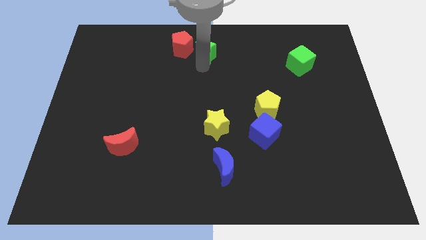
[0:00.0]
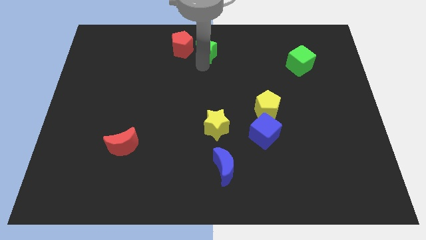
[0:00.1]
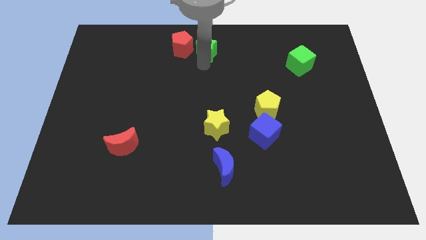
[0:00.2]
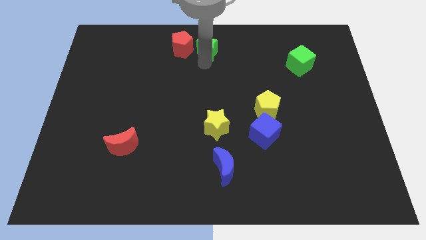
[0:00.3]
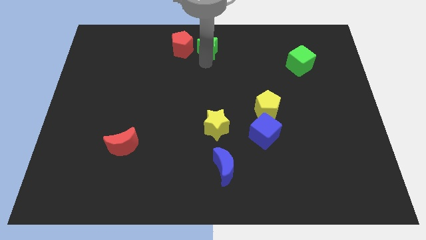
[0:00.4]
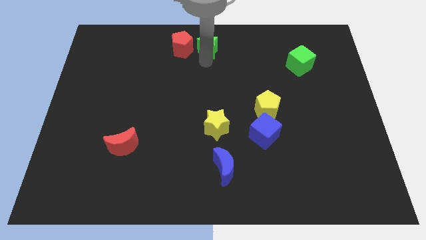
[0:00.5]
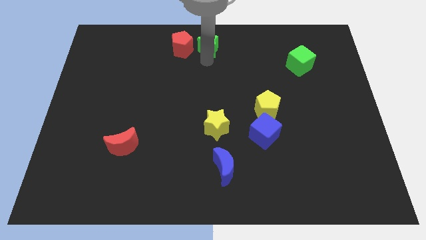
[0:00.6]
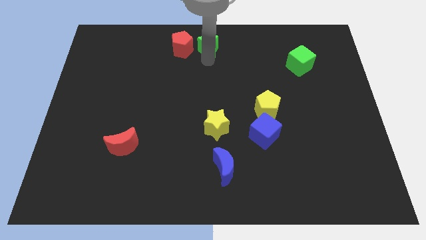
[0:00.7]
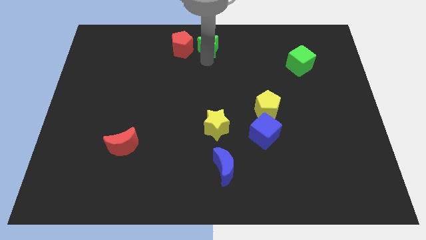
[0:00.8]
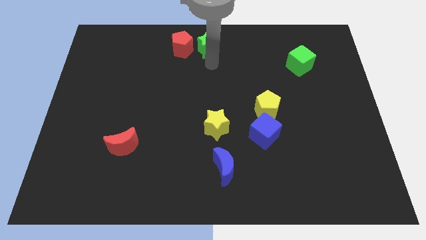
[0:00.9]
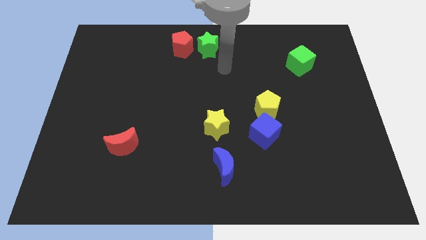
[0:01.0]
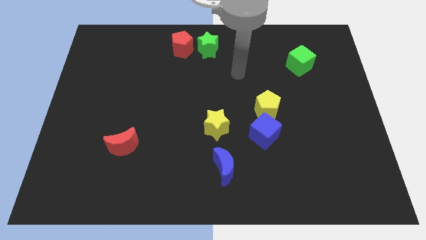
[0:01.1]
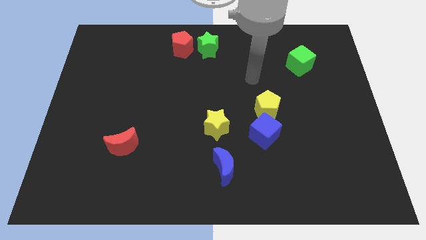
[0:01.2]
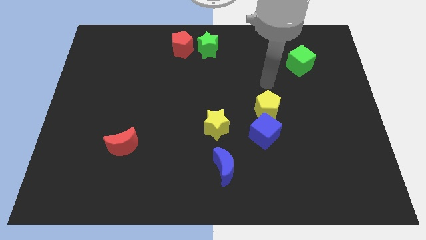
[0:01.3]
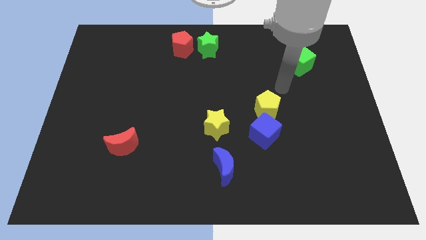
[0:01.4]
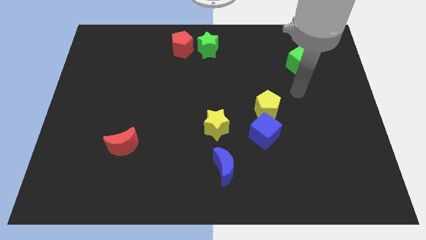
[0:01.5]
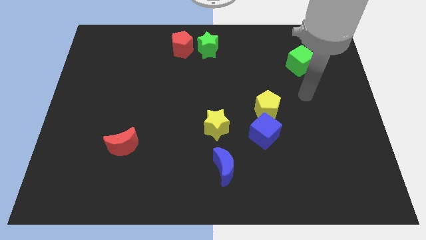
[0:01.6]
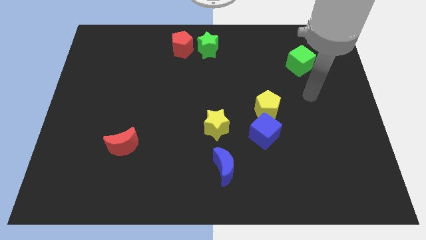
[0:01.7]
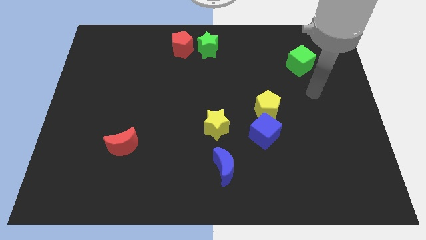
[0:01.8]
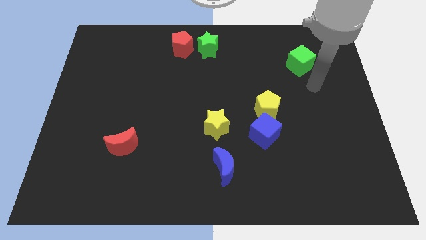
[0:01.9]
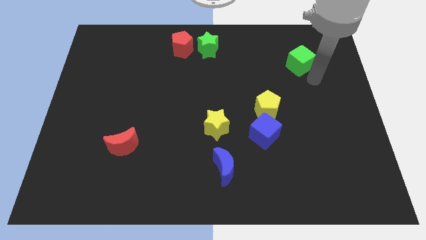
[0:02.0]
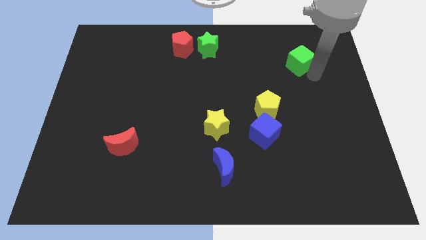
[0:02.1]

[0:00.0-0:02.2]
place your arm below the green cube

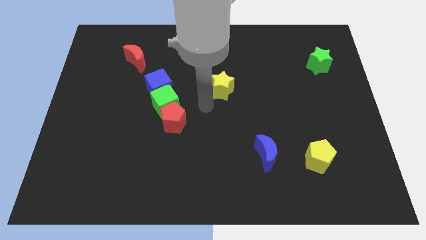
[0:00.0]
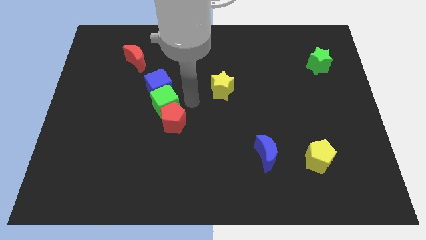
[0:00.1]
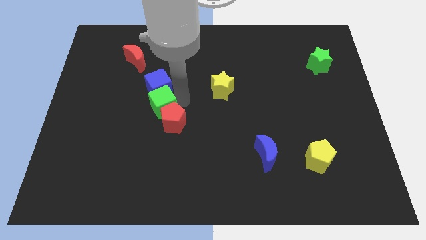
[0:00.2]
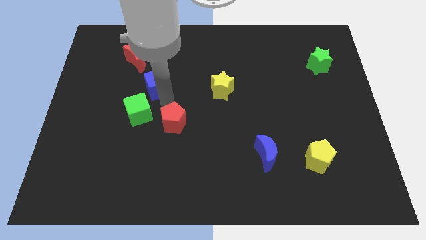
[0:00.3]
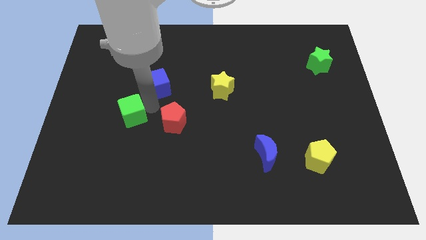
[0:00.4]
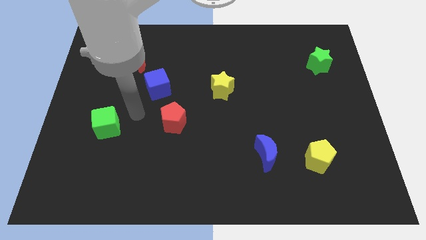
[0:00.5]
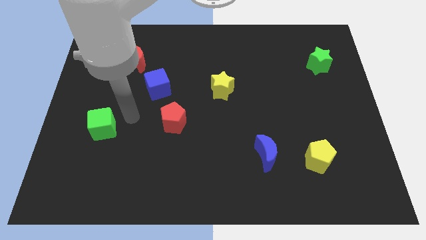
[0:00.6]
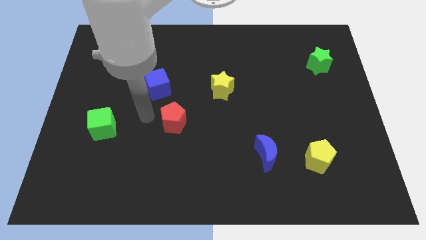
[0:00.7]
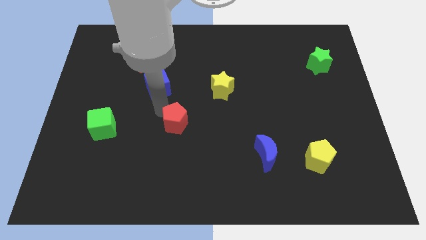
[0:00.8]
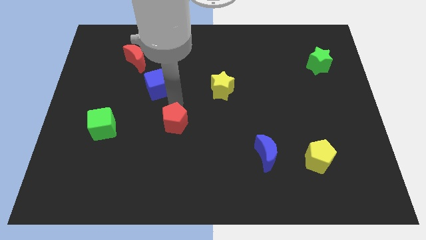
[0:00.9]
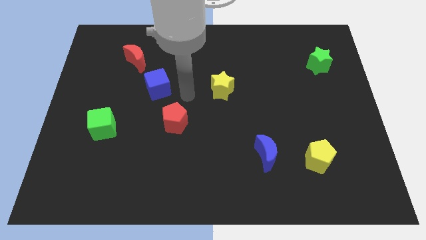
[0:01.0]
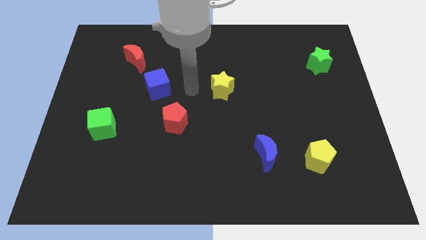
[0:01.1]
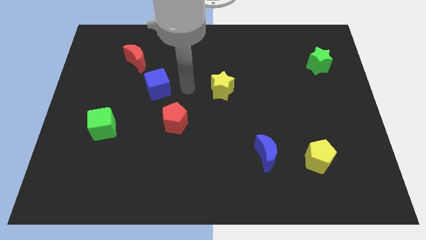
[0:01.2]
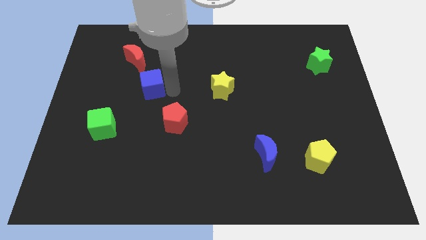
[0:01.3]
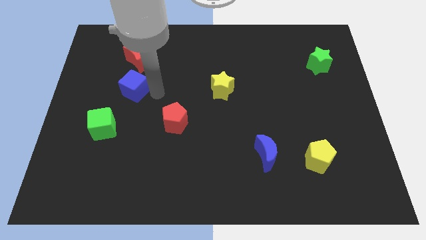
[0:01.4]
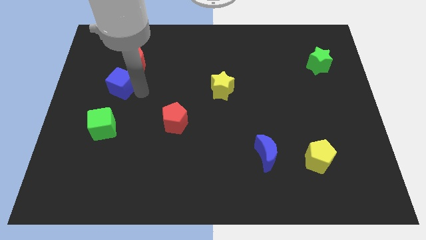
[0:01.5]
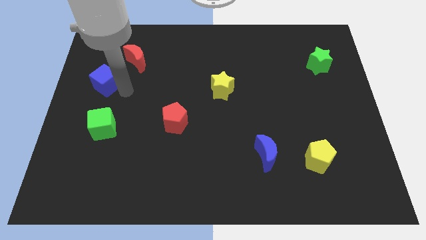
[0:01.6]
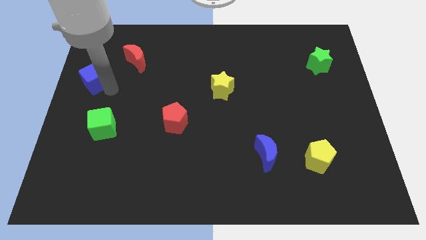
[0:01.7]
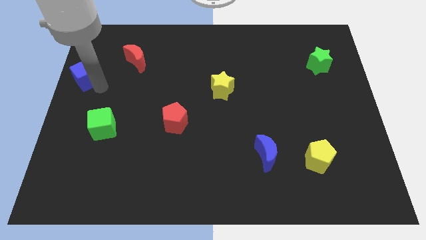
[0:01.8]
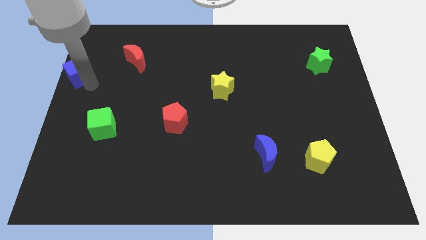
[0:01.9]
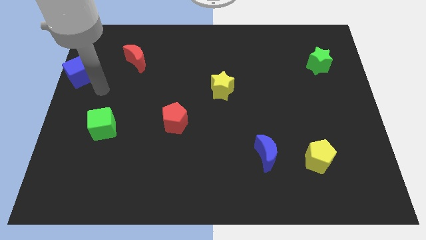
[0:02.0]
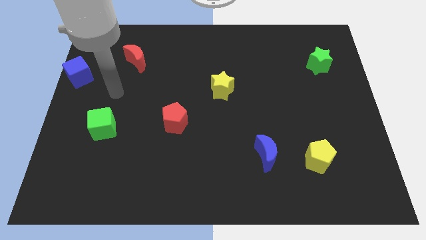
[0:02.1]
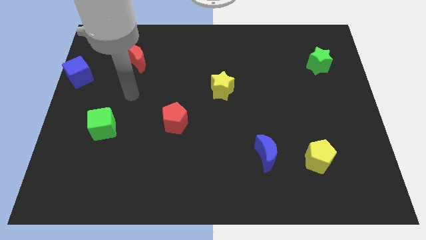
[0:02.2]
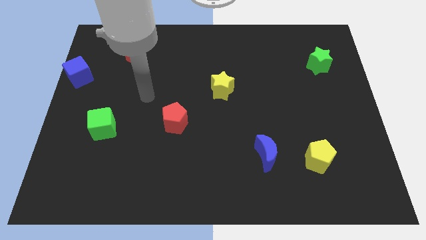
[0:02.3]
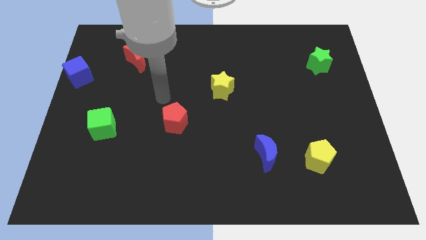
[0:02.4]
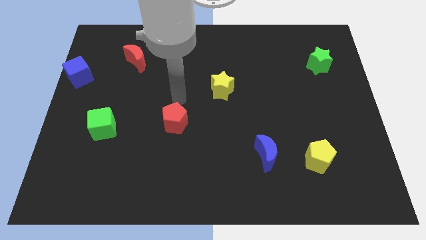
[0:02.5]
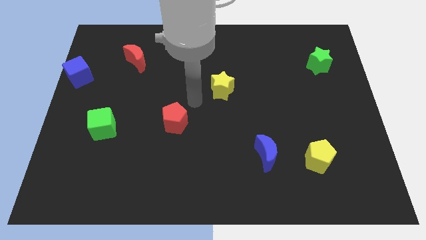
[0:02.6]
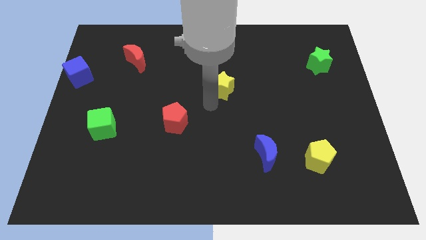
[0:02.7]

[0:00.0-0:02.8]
separate the green cube and the blue cube

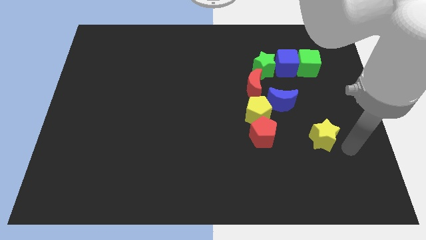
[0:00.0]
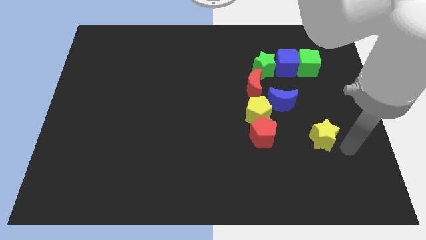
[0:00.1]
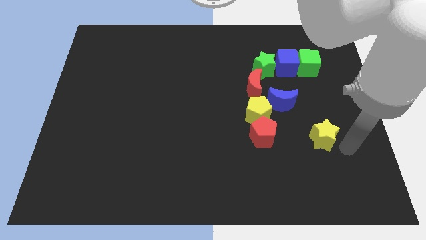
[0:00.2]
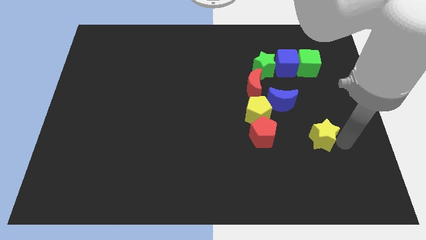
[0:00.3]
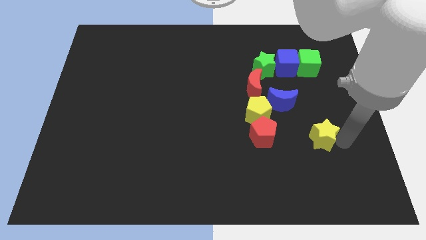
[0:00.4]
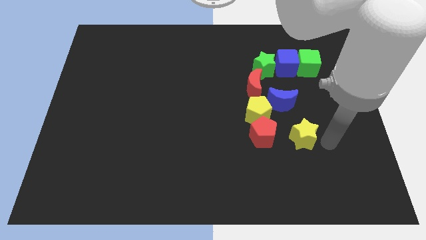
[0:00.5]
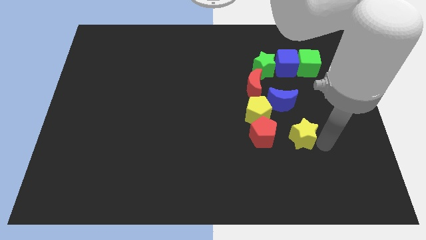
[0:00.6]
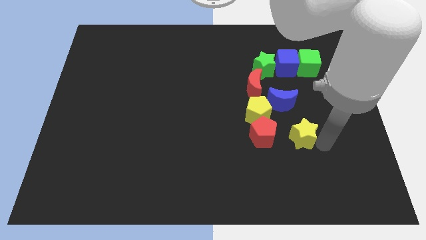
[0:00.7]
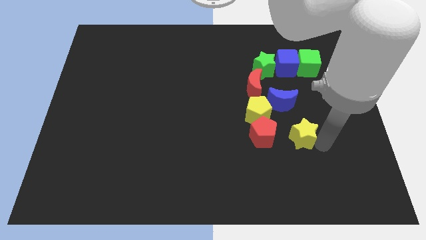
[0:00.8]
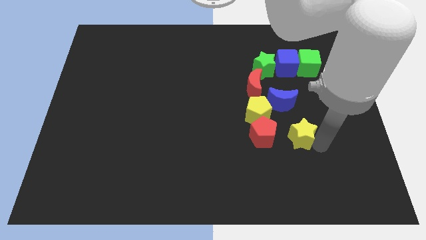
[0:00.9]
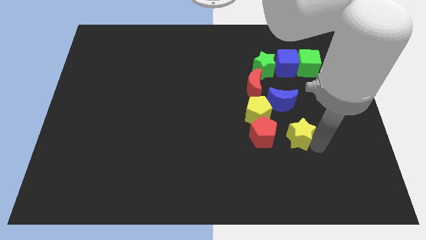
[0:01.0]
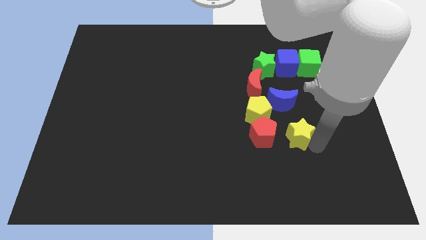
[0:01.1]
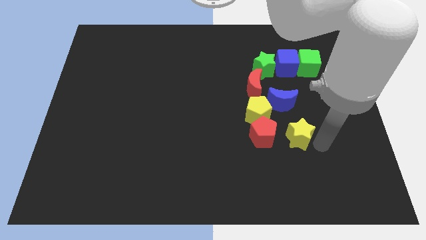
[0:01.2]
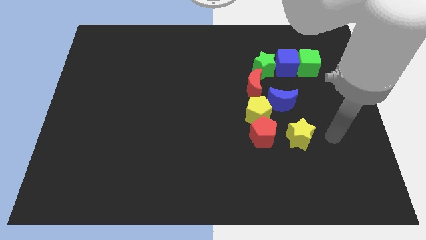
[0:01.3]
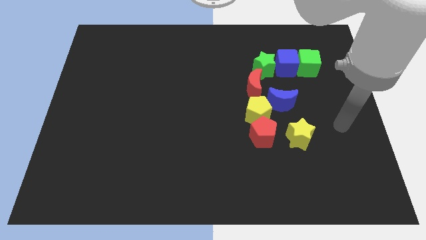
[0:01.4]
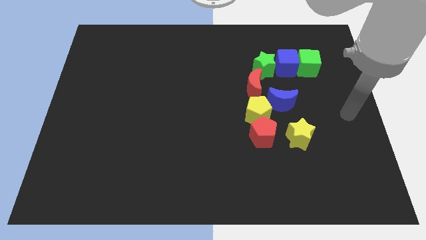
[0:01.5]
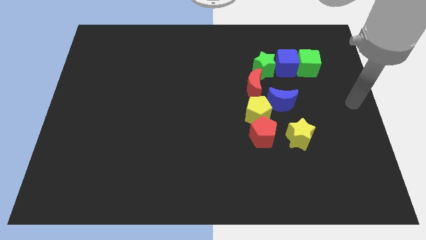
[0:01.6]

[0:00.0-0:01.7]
push the yellow star close to the red pentagon

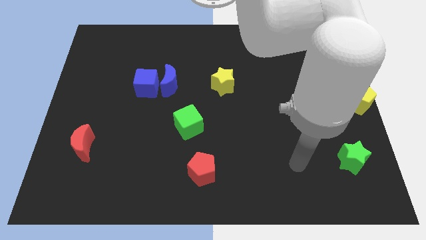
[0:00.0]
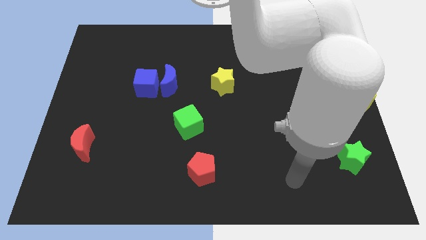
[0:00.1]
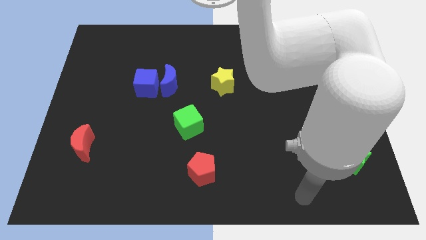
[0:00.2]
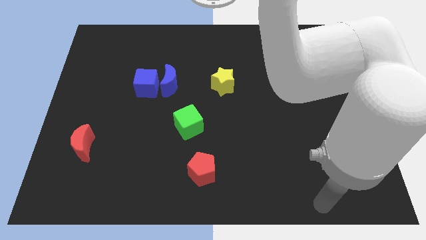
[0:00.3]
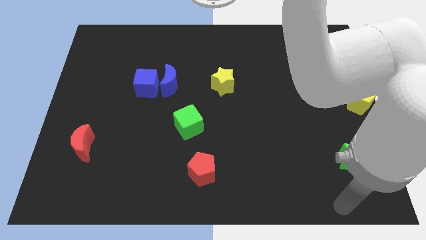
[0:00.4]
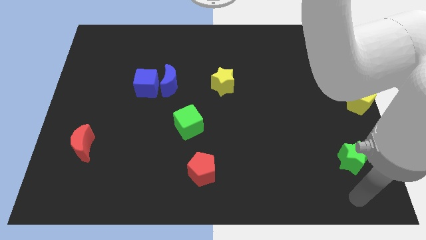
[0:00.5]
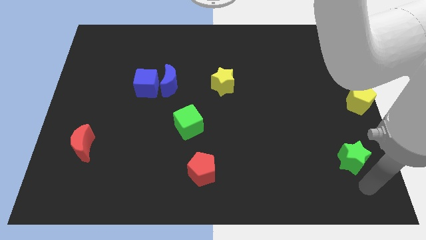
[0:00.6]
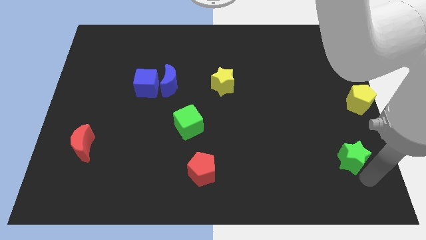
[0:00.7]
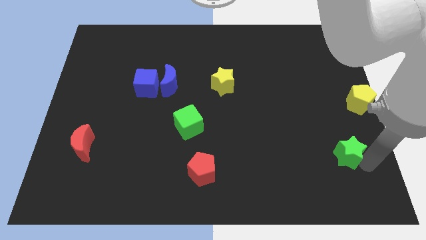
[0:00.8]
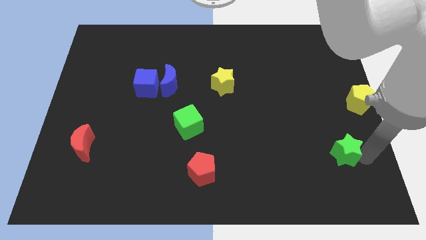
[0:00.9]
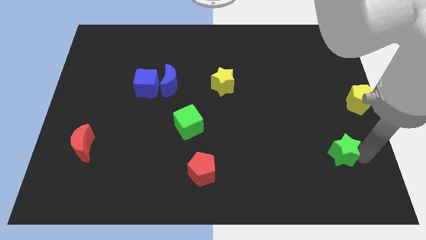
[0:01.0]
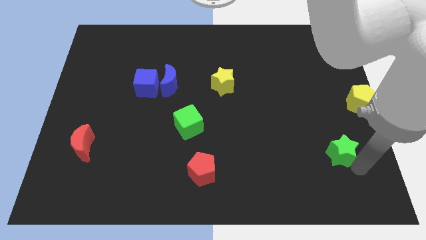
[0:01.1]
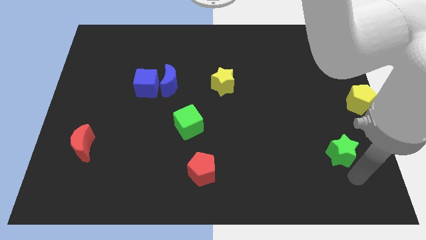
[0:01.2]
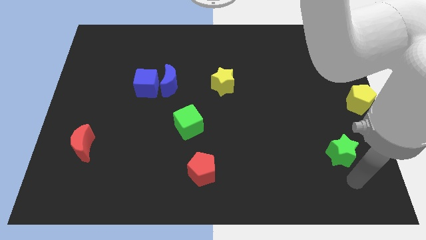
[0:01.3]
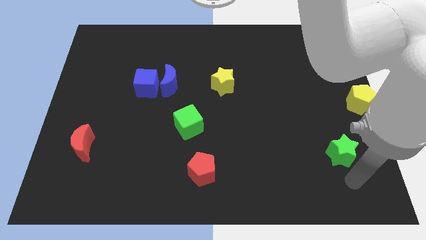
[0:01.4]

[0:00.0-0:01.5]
place your arm below green star

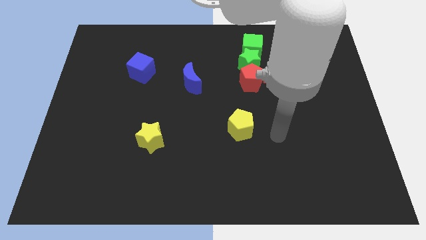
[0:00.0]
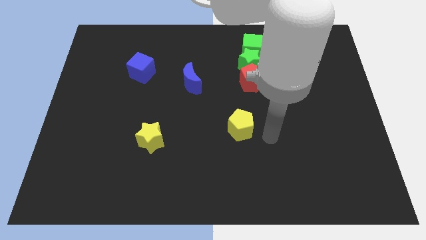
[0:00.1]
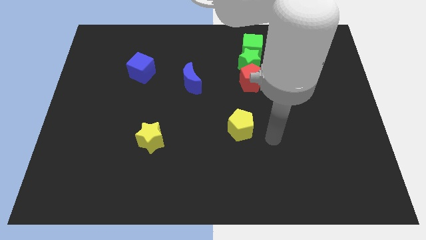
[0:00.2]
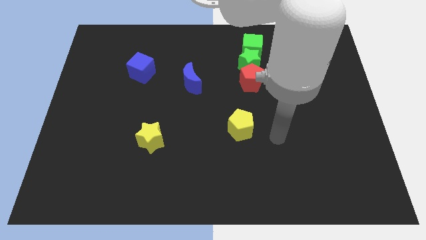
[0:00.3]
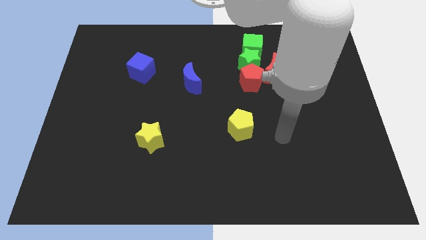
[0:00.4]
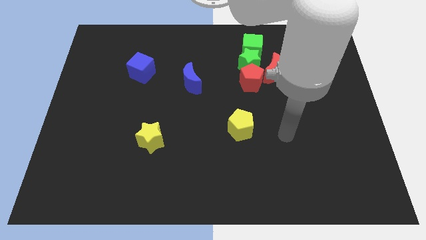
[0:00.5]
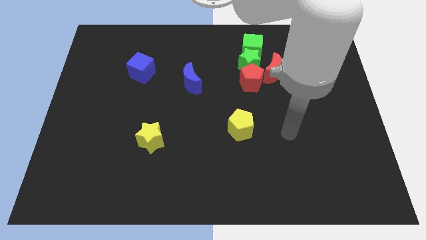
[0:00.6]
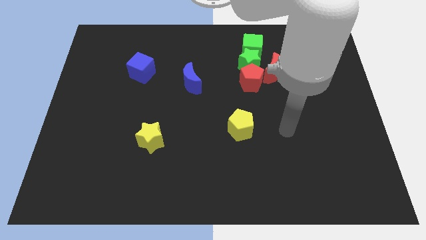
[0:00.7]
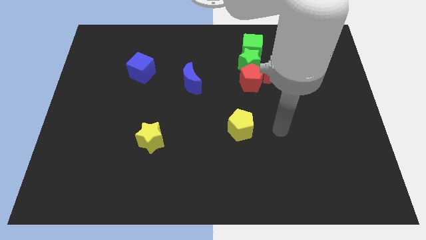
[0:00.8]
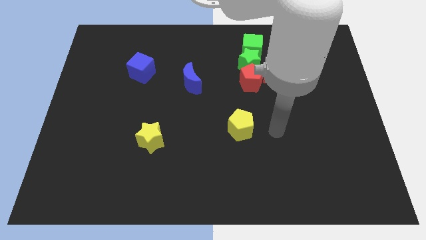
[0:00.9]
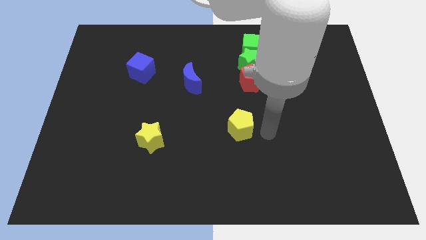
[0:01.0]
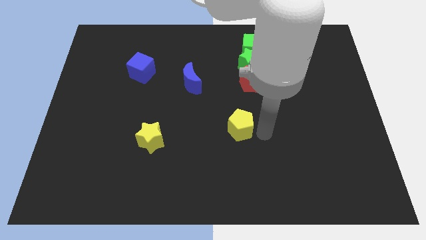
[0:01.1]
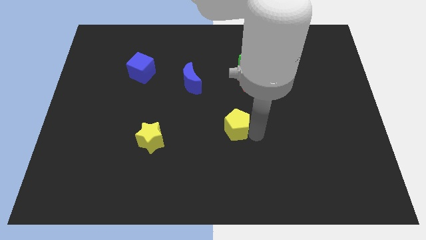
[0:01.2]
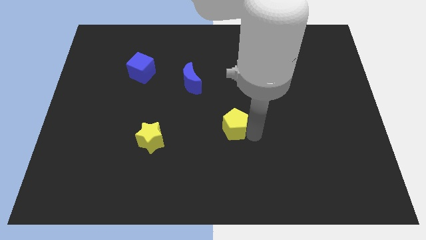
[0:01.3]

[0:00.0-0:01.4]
move arm right beside the yellow pentagon
